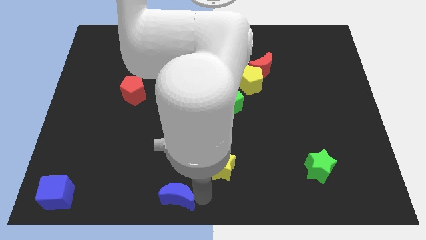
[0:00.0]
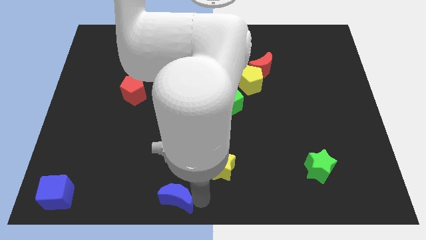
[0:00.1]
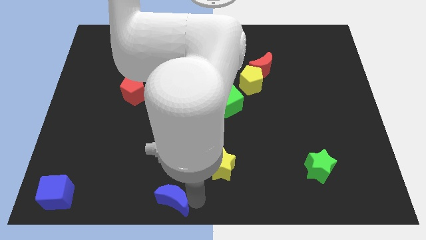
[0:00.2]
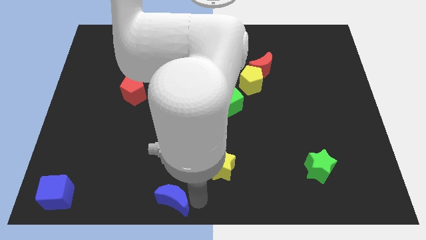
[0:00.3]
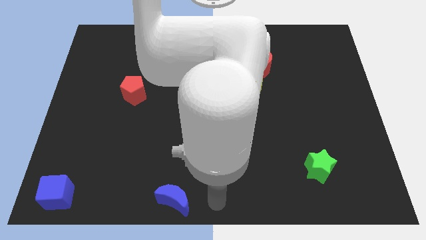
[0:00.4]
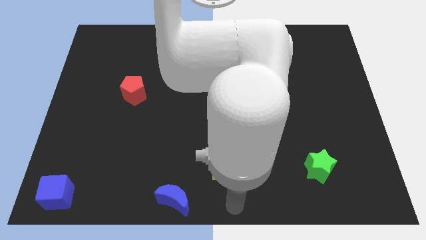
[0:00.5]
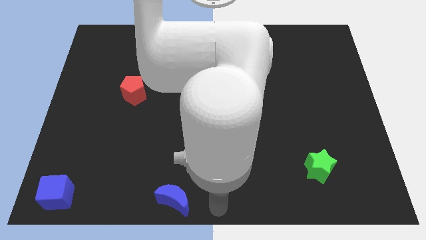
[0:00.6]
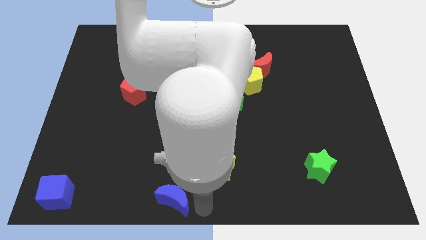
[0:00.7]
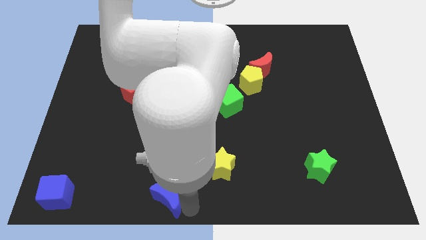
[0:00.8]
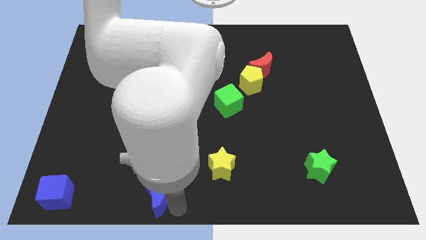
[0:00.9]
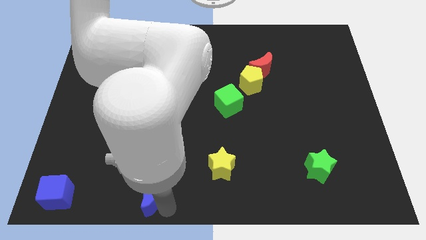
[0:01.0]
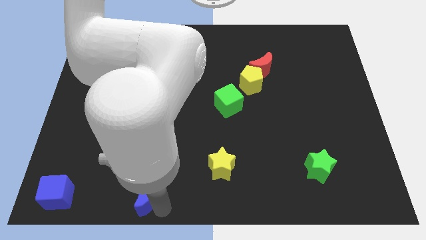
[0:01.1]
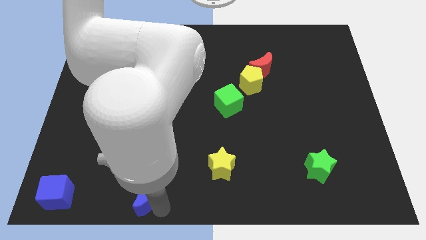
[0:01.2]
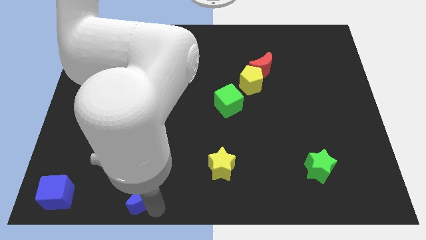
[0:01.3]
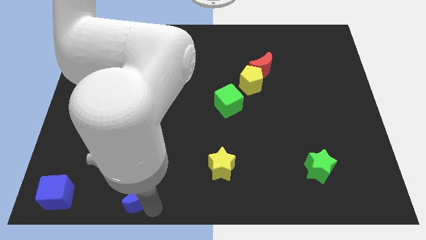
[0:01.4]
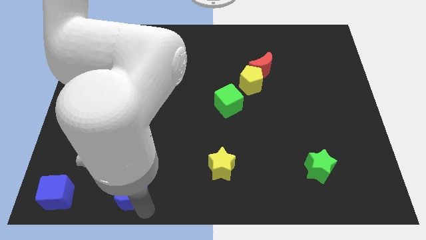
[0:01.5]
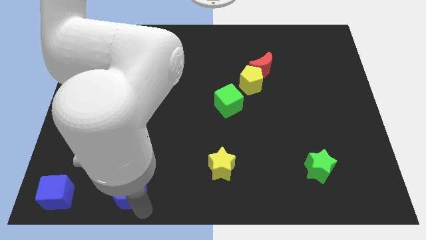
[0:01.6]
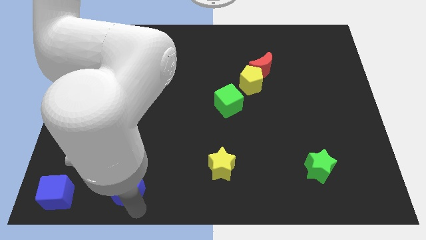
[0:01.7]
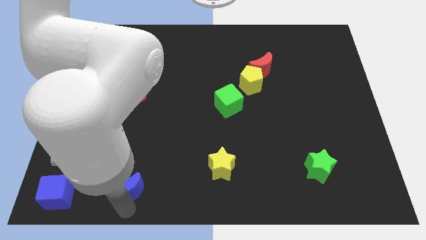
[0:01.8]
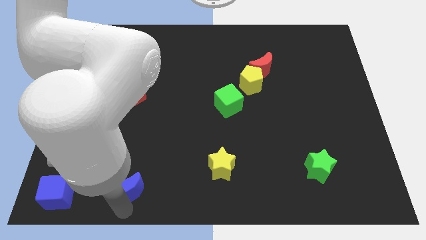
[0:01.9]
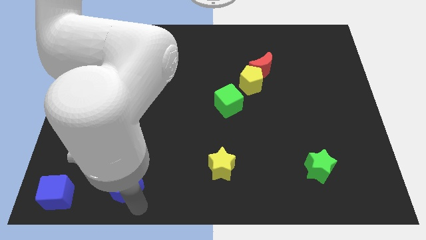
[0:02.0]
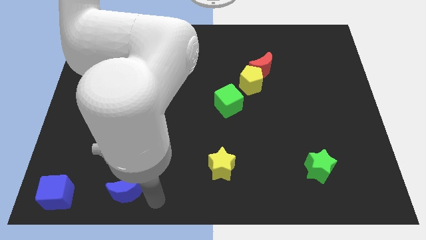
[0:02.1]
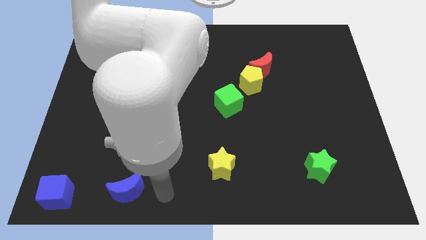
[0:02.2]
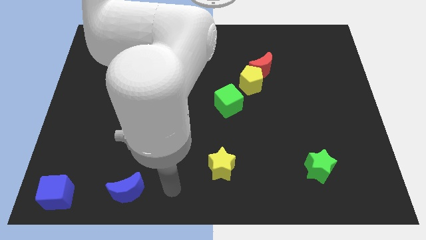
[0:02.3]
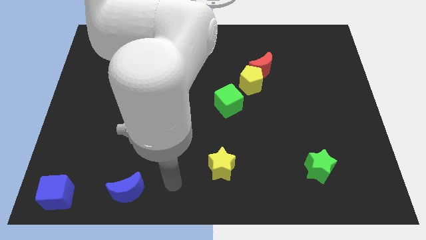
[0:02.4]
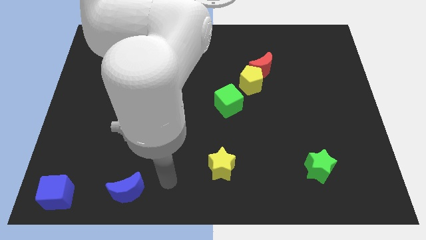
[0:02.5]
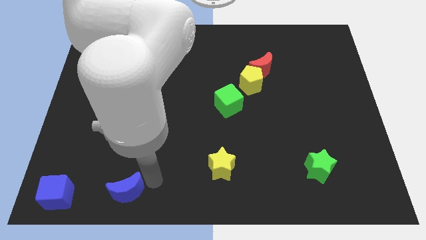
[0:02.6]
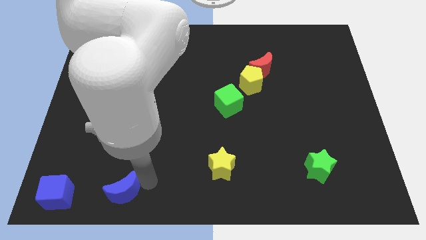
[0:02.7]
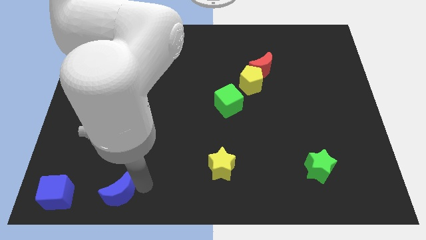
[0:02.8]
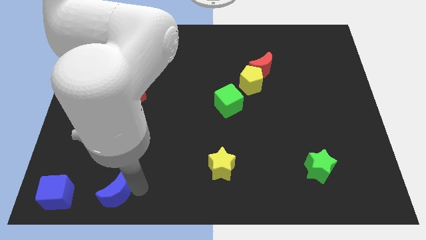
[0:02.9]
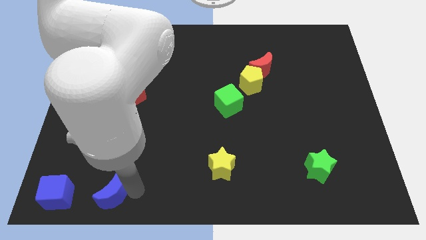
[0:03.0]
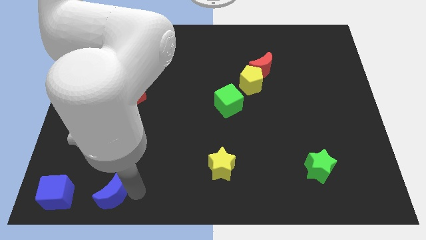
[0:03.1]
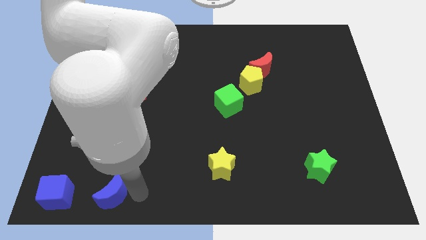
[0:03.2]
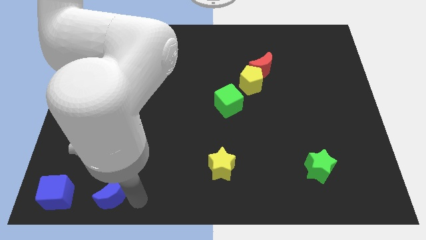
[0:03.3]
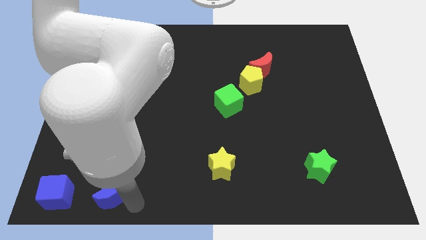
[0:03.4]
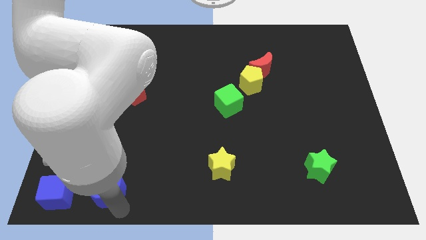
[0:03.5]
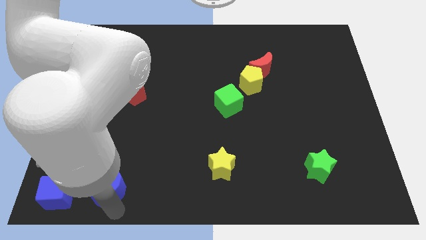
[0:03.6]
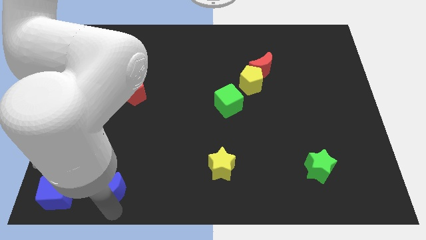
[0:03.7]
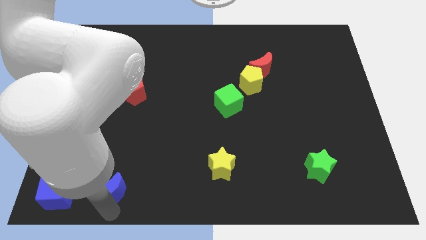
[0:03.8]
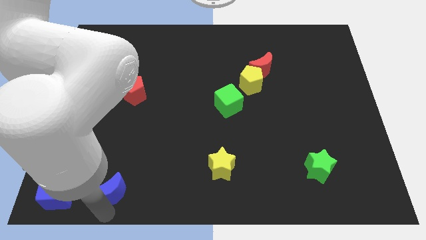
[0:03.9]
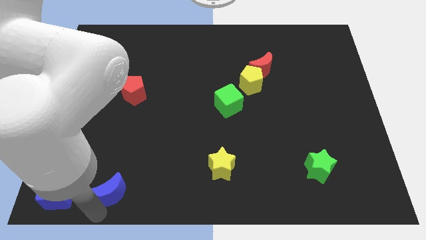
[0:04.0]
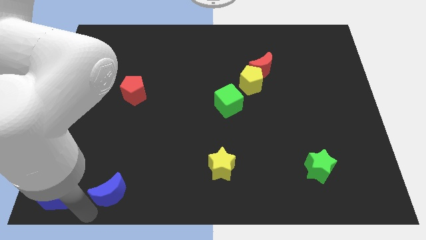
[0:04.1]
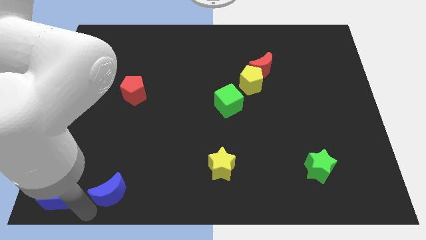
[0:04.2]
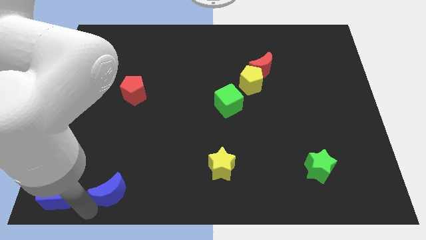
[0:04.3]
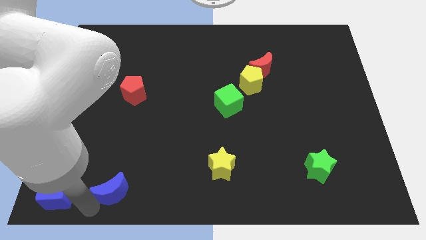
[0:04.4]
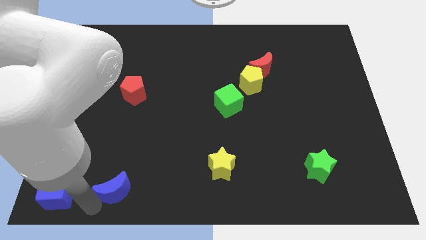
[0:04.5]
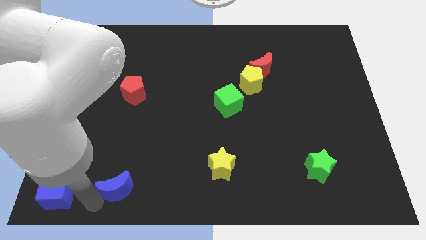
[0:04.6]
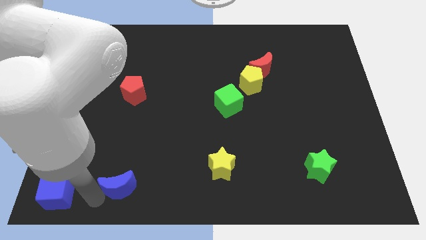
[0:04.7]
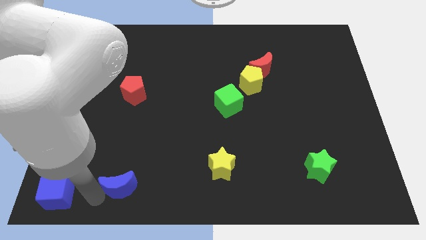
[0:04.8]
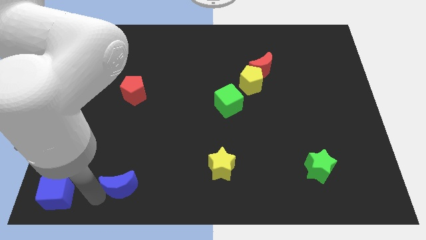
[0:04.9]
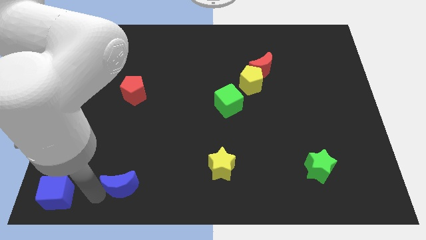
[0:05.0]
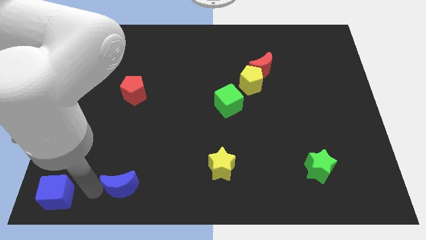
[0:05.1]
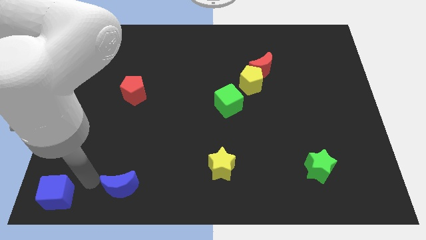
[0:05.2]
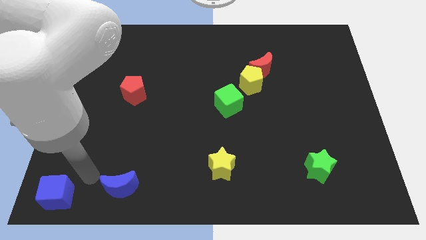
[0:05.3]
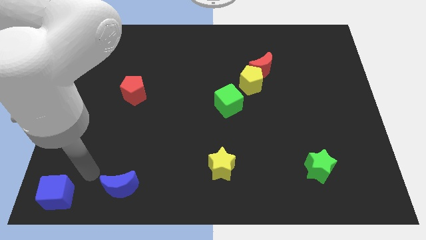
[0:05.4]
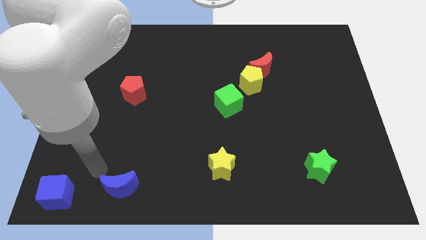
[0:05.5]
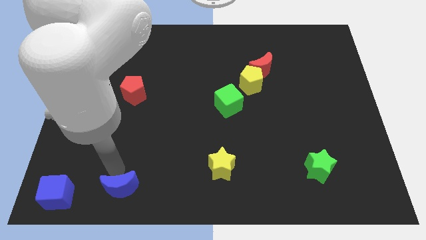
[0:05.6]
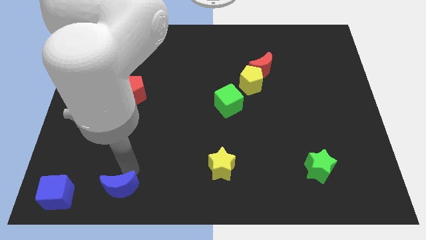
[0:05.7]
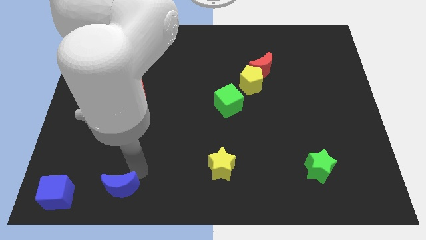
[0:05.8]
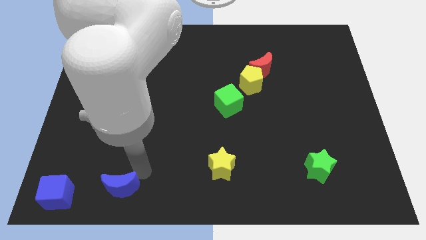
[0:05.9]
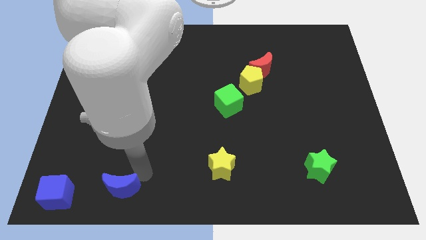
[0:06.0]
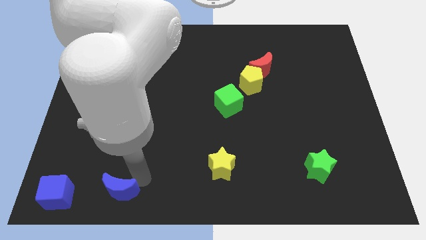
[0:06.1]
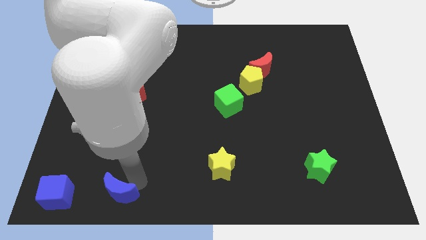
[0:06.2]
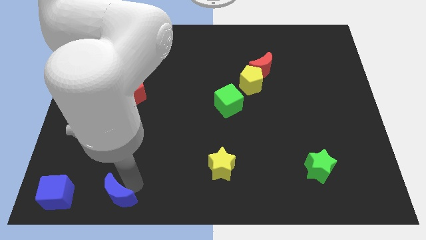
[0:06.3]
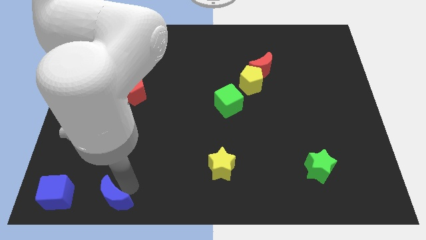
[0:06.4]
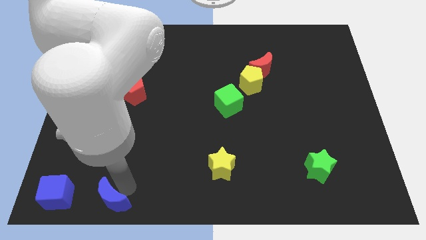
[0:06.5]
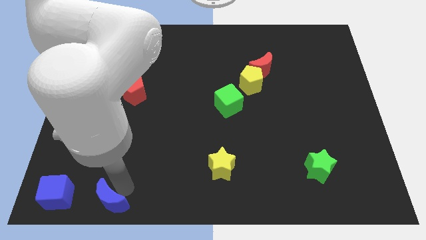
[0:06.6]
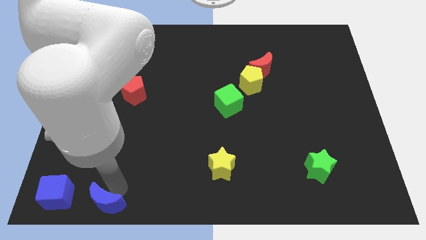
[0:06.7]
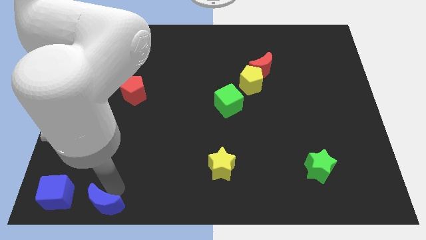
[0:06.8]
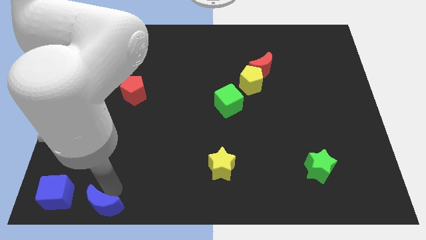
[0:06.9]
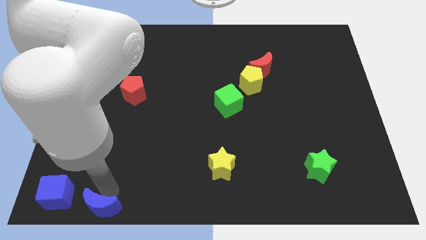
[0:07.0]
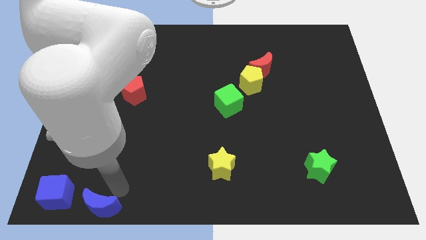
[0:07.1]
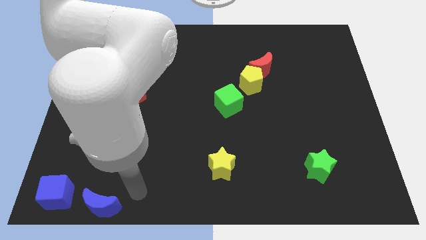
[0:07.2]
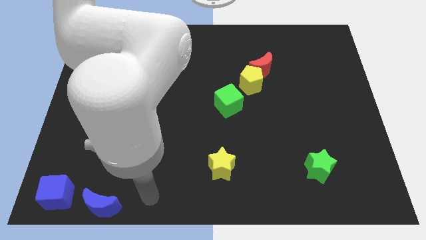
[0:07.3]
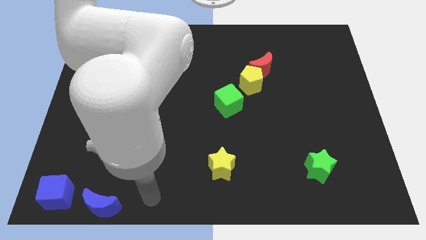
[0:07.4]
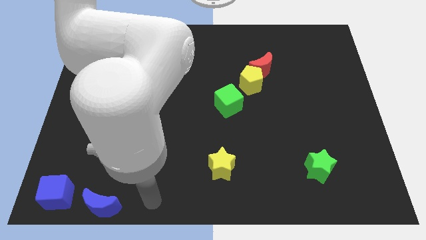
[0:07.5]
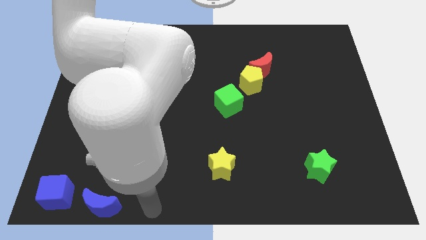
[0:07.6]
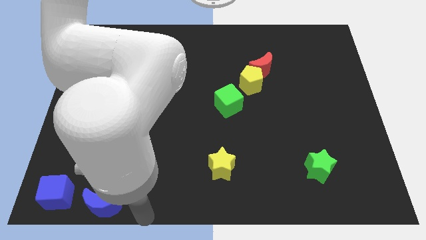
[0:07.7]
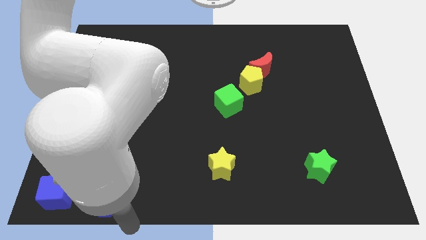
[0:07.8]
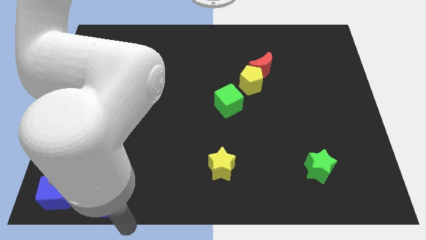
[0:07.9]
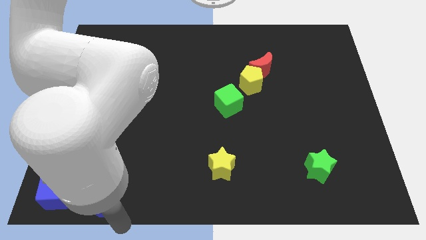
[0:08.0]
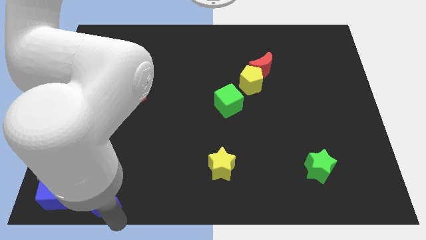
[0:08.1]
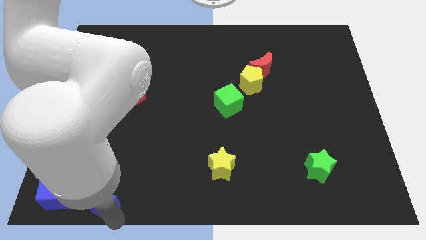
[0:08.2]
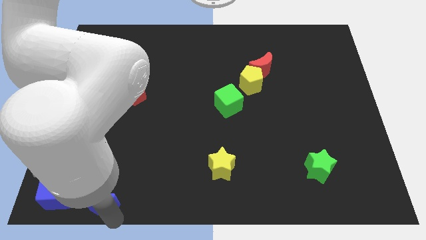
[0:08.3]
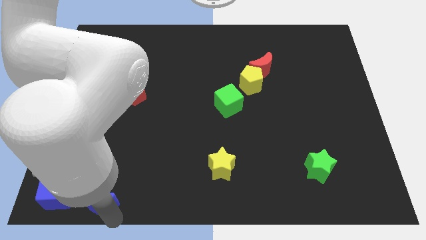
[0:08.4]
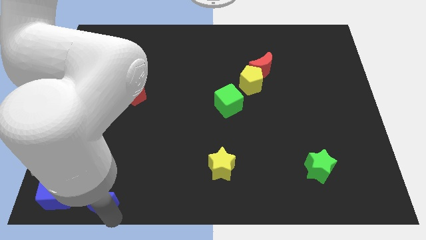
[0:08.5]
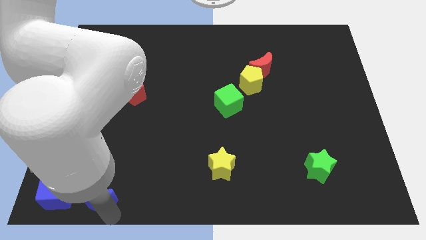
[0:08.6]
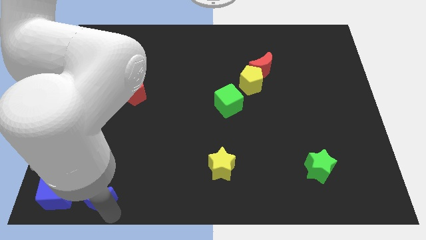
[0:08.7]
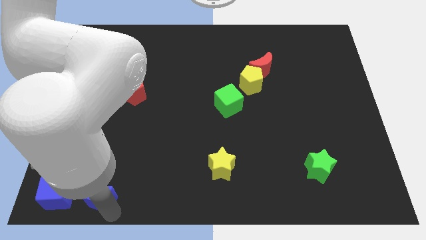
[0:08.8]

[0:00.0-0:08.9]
place the blue crescent at the bottom left
